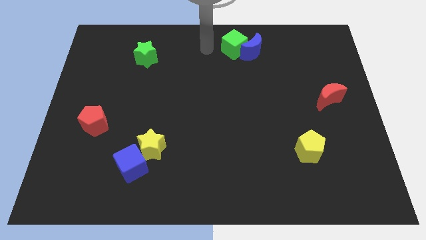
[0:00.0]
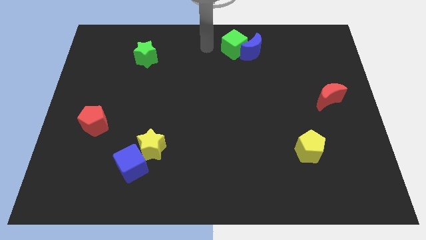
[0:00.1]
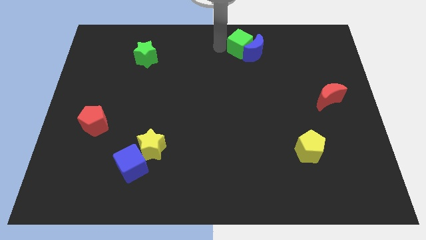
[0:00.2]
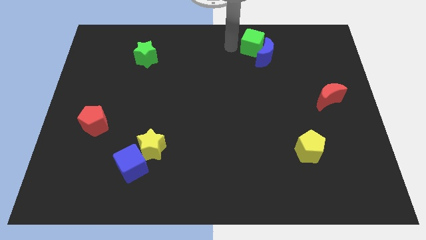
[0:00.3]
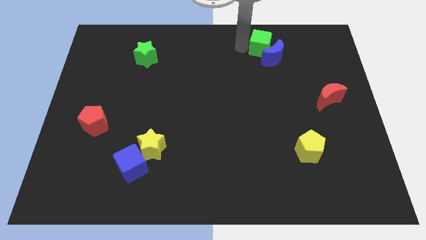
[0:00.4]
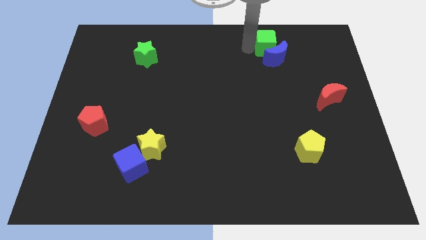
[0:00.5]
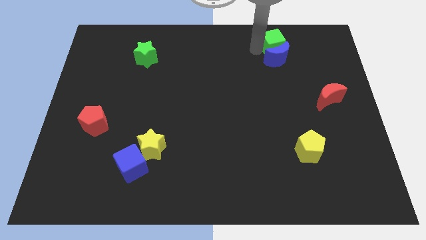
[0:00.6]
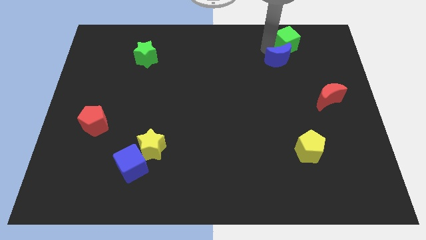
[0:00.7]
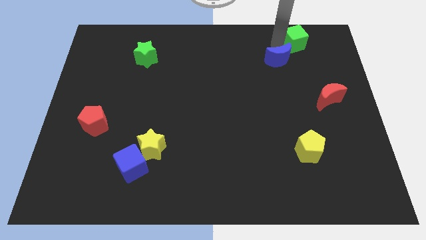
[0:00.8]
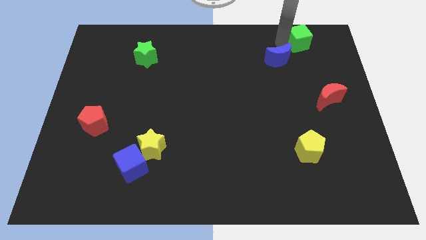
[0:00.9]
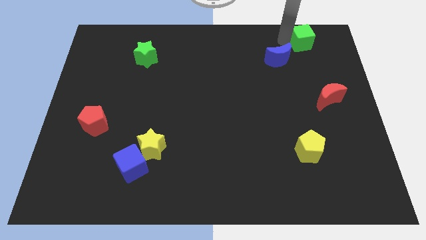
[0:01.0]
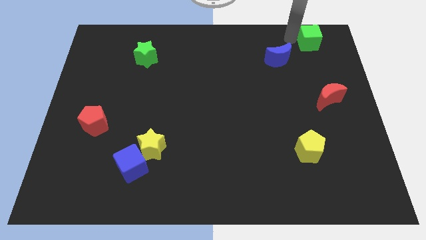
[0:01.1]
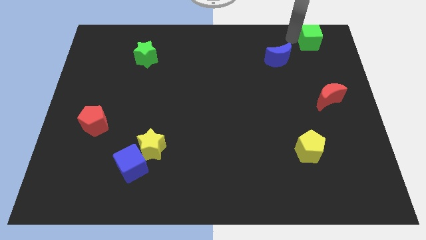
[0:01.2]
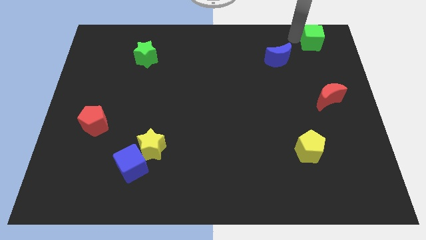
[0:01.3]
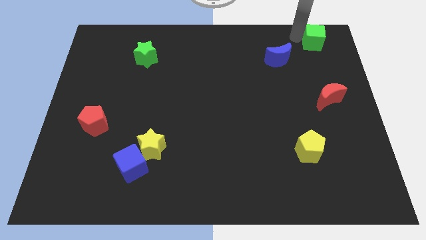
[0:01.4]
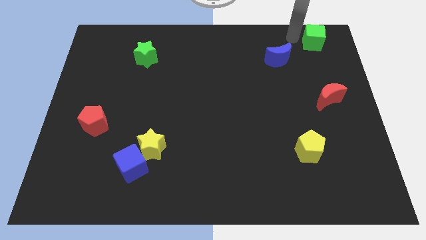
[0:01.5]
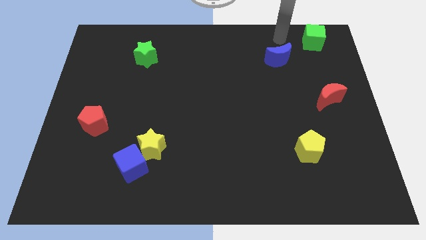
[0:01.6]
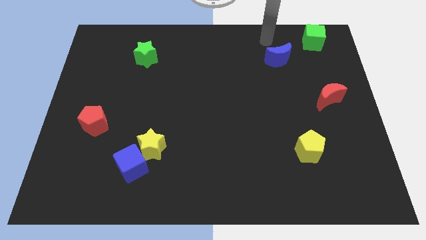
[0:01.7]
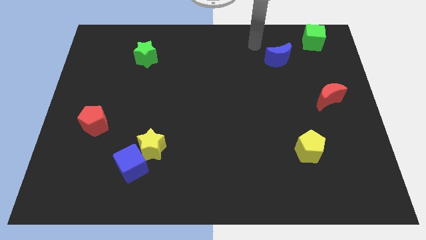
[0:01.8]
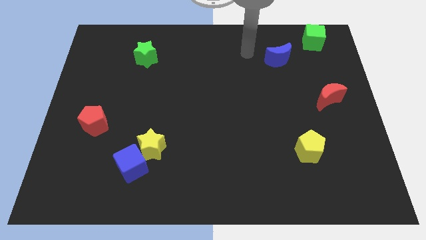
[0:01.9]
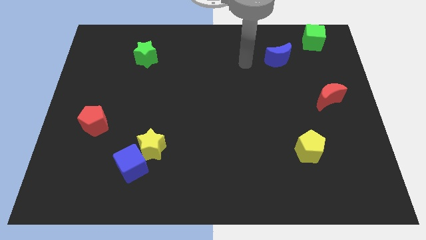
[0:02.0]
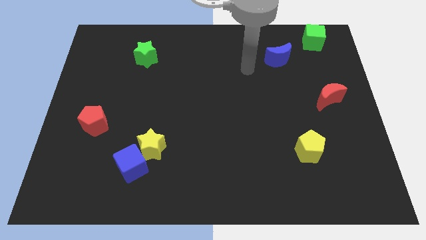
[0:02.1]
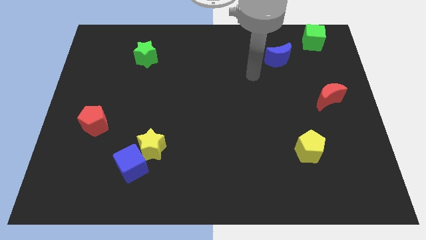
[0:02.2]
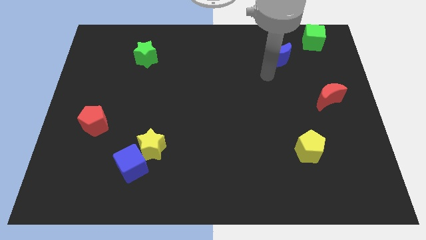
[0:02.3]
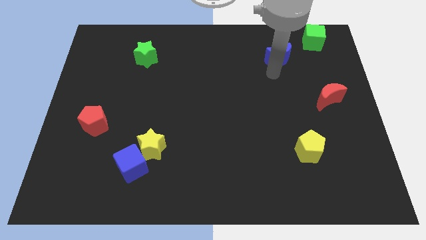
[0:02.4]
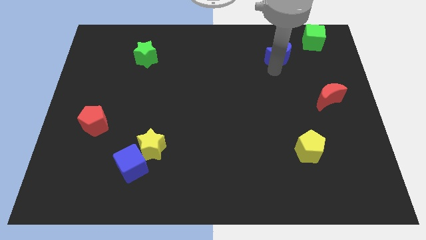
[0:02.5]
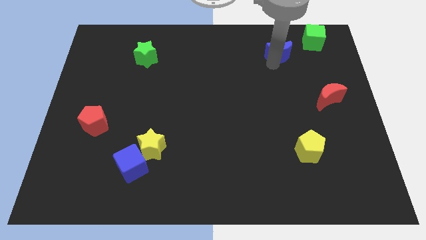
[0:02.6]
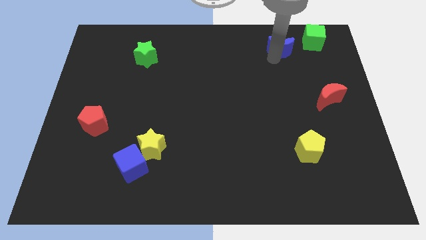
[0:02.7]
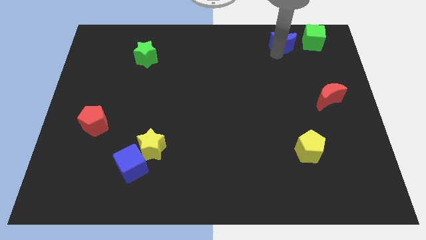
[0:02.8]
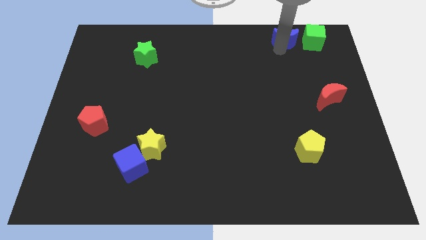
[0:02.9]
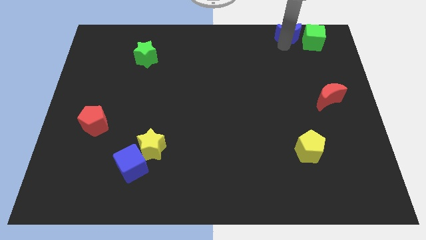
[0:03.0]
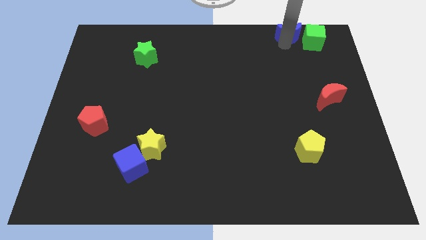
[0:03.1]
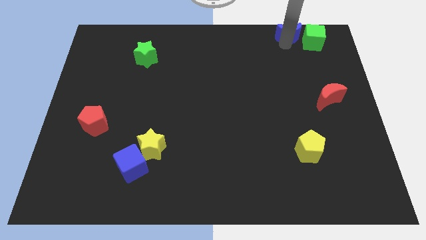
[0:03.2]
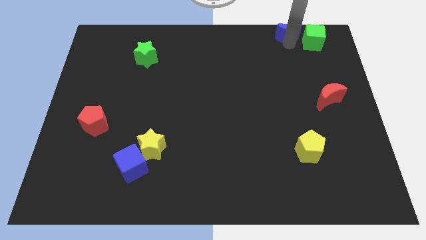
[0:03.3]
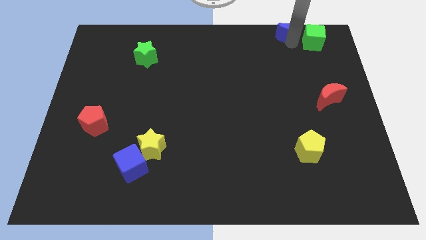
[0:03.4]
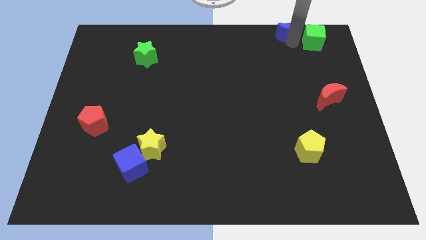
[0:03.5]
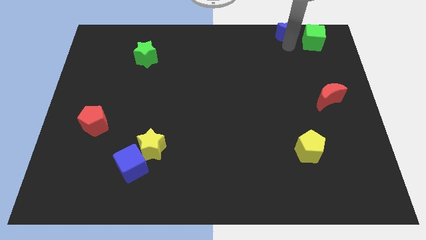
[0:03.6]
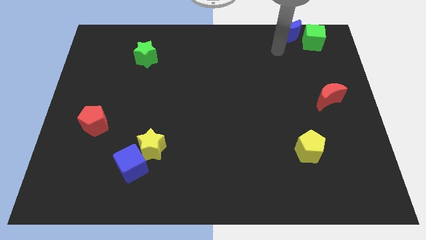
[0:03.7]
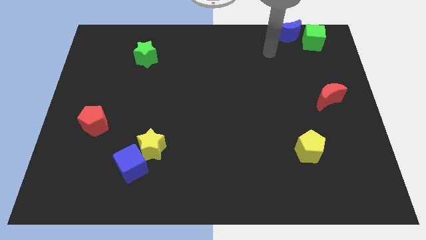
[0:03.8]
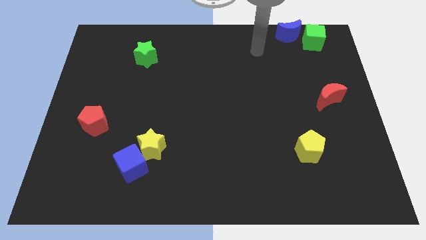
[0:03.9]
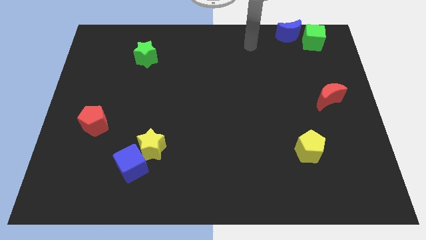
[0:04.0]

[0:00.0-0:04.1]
move blue crescent to the left of green cube

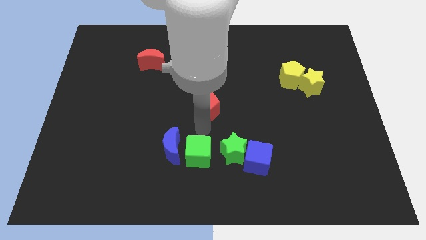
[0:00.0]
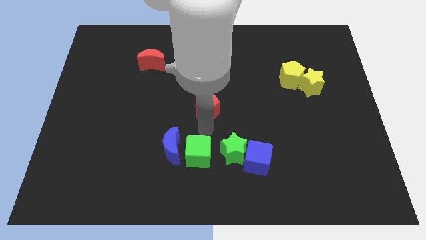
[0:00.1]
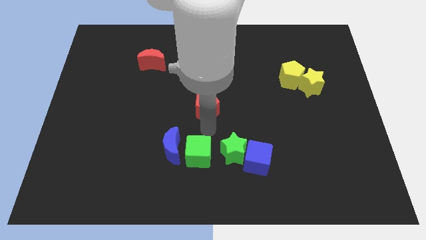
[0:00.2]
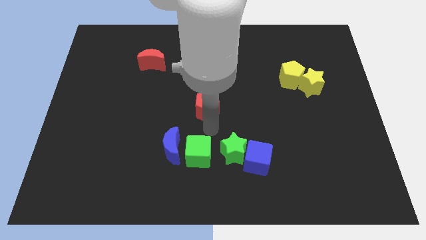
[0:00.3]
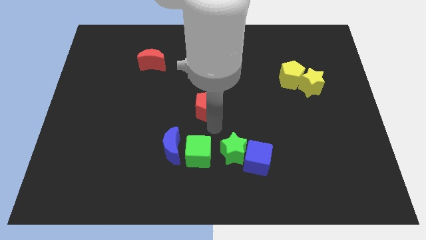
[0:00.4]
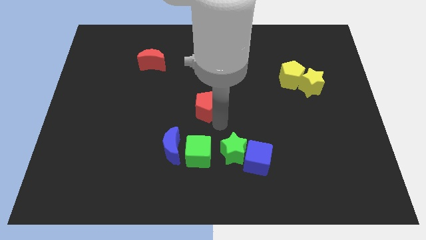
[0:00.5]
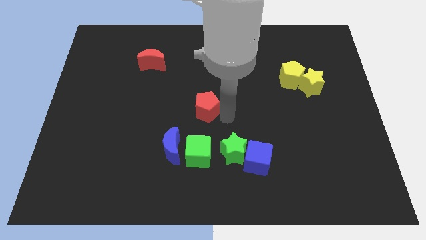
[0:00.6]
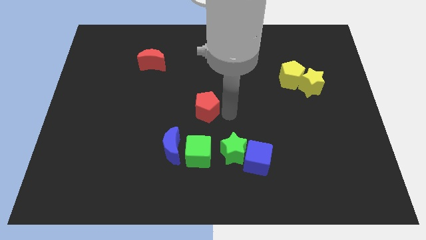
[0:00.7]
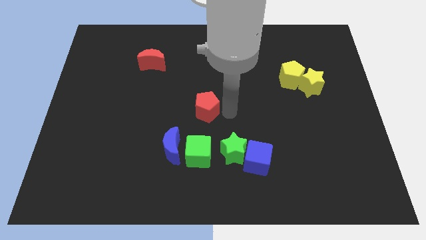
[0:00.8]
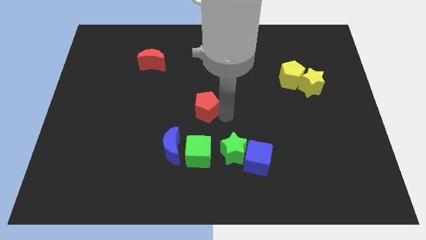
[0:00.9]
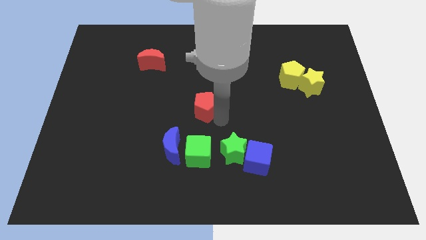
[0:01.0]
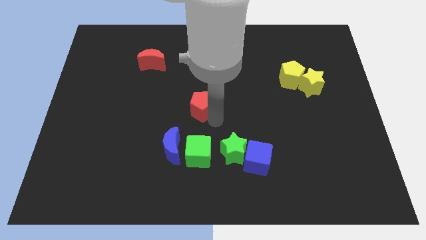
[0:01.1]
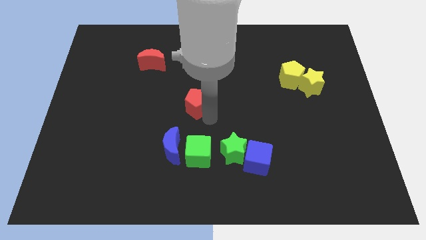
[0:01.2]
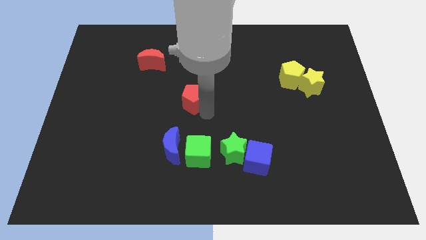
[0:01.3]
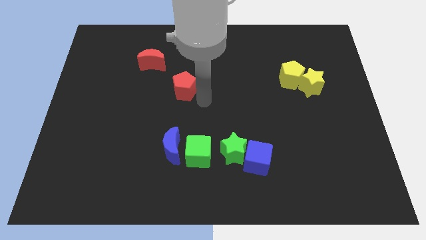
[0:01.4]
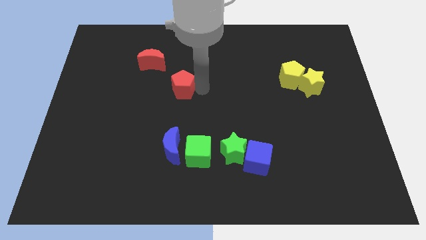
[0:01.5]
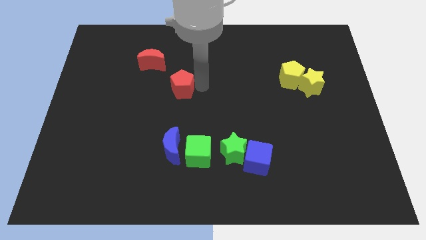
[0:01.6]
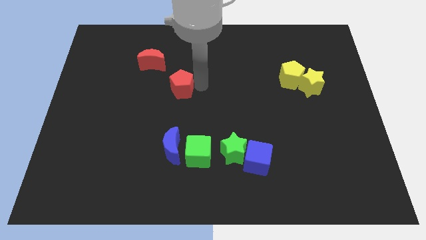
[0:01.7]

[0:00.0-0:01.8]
place the red pentagon diagonally to red moon

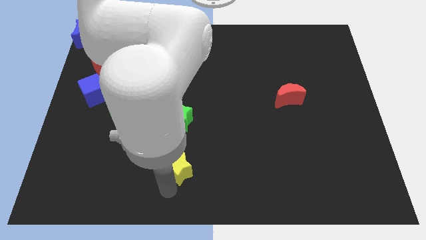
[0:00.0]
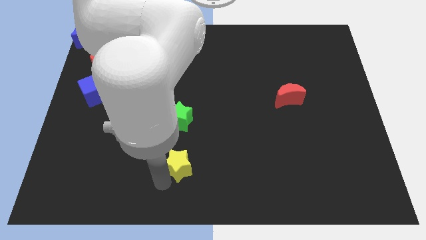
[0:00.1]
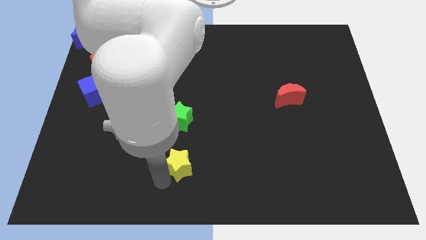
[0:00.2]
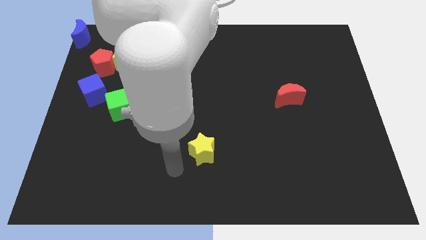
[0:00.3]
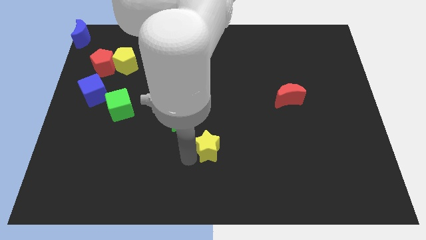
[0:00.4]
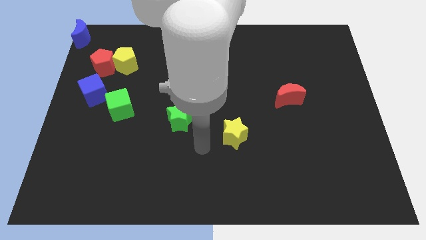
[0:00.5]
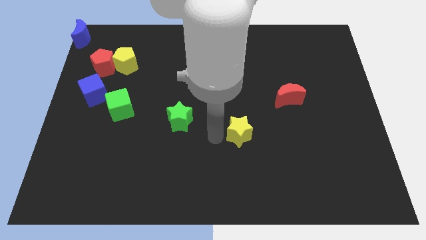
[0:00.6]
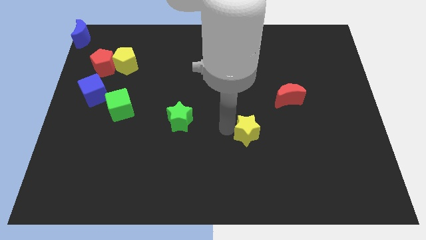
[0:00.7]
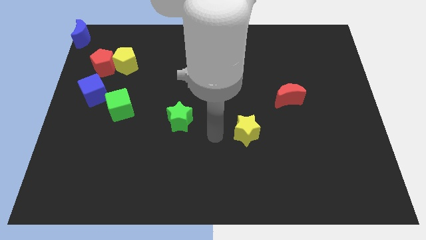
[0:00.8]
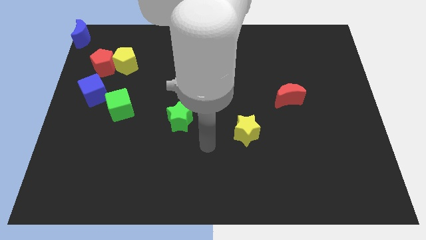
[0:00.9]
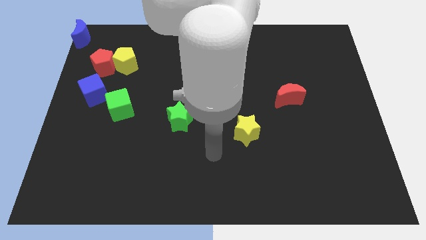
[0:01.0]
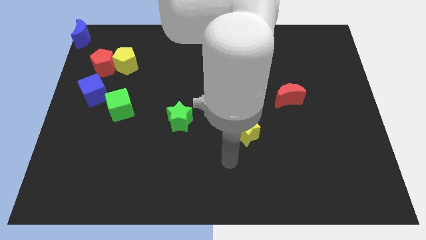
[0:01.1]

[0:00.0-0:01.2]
push the yellow star diagonally up

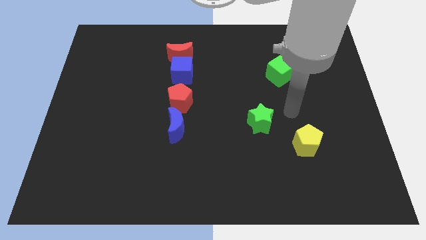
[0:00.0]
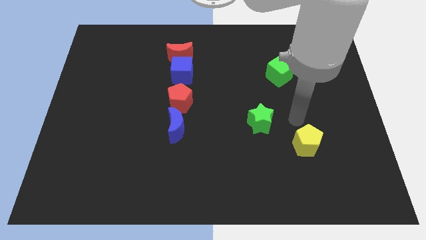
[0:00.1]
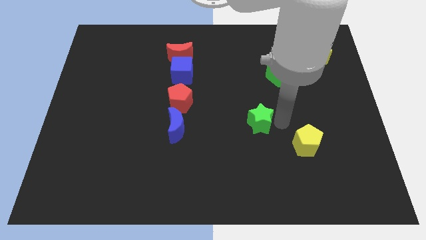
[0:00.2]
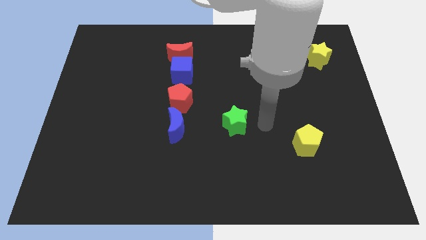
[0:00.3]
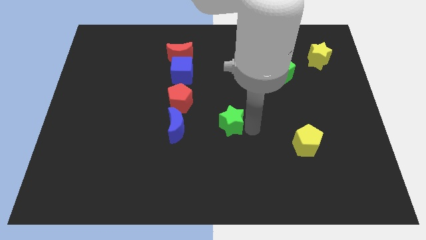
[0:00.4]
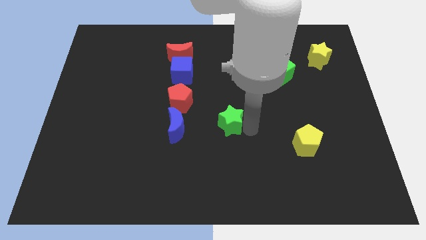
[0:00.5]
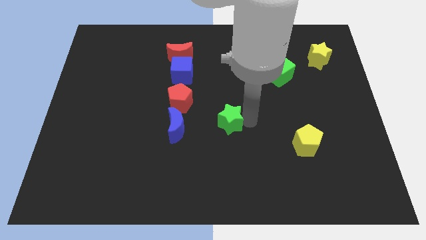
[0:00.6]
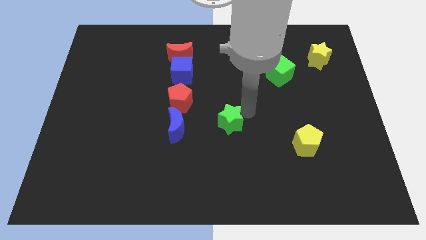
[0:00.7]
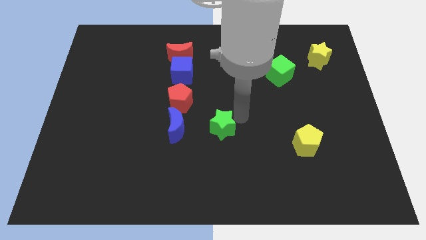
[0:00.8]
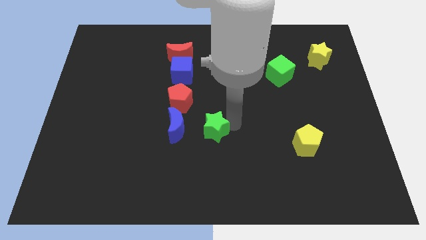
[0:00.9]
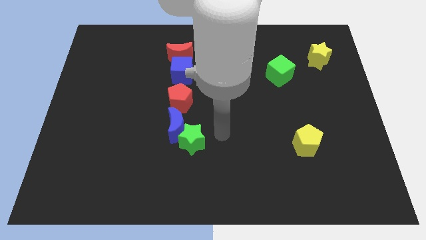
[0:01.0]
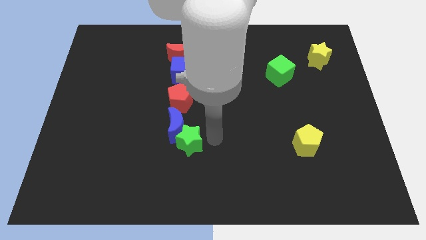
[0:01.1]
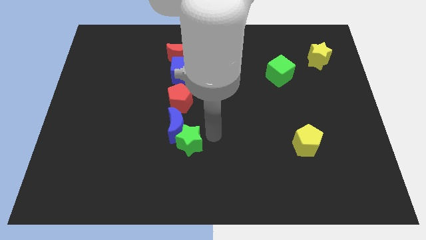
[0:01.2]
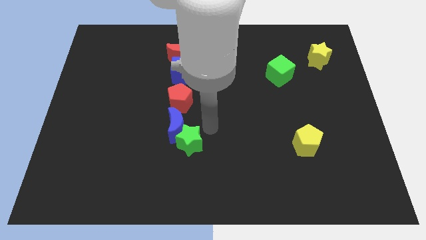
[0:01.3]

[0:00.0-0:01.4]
move the green star to the bottom right side of the blue moon

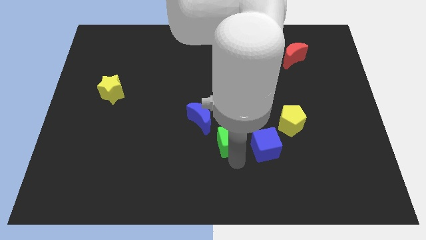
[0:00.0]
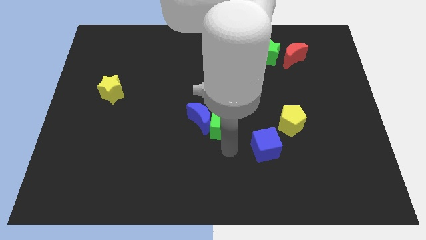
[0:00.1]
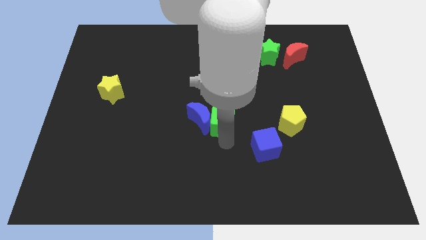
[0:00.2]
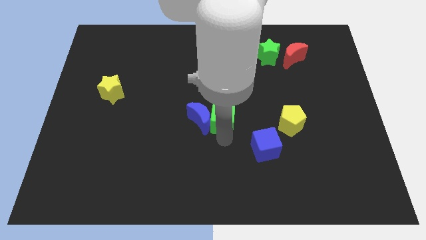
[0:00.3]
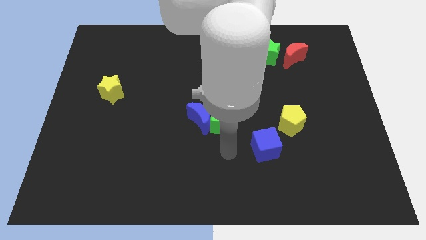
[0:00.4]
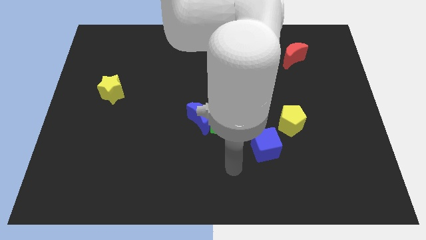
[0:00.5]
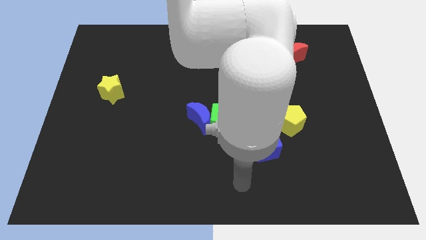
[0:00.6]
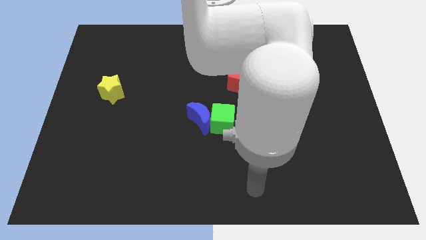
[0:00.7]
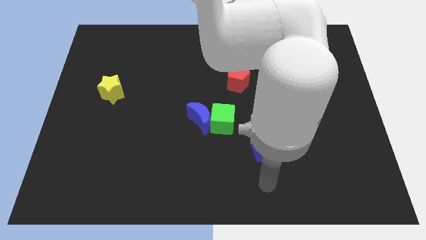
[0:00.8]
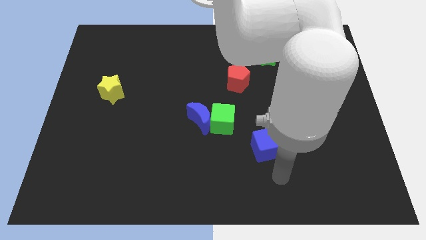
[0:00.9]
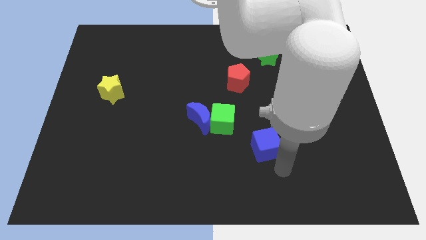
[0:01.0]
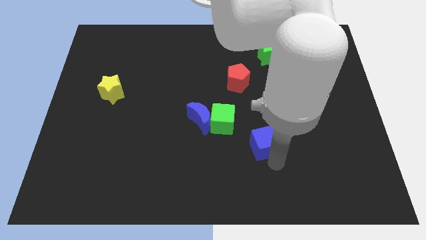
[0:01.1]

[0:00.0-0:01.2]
point your arm at the bottom of the blue cube
